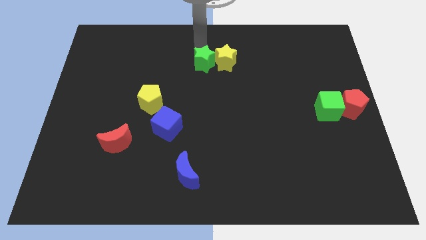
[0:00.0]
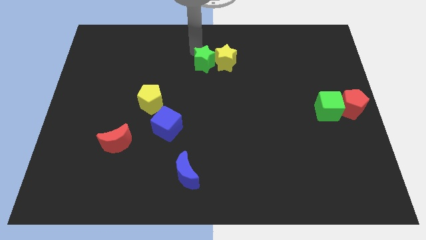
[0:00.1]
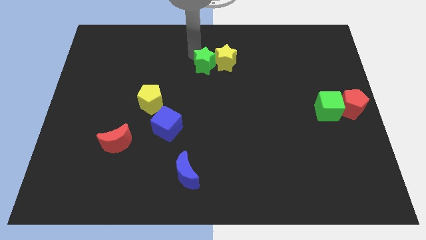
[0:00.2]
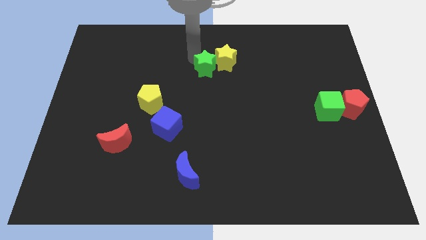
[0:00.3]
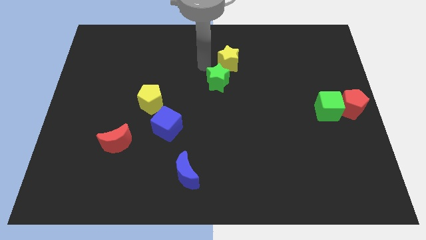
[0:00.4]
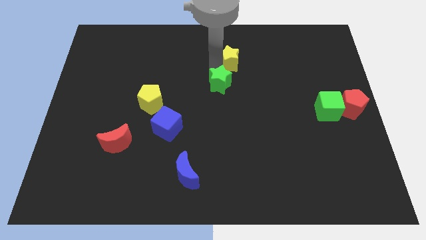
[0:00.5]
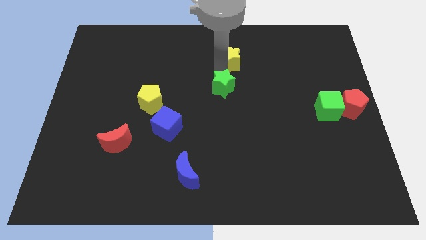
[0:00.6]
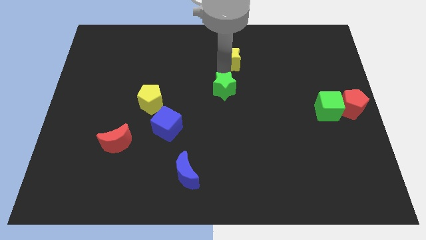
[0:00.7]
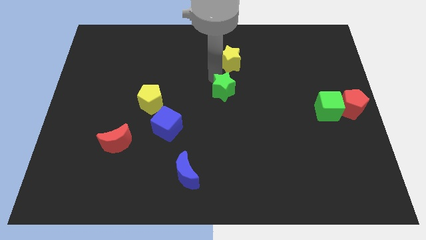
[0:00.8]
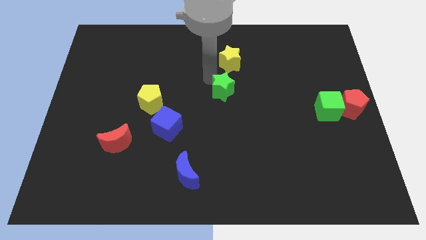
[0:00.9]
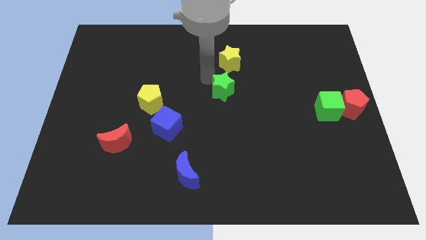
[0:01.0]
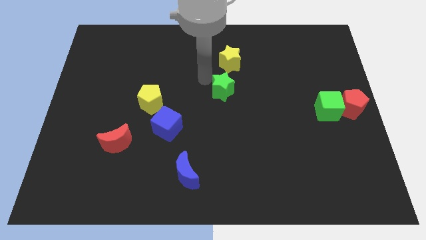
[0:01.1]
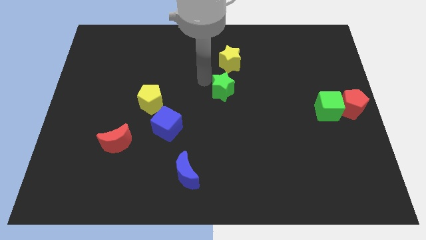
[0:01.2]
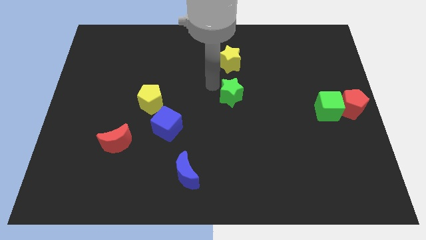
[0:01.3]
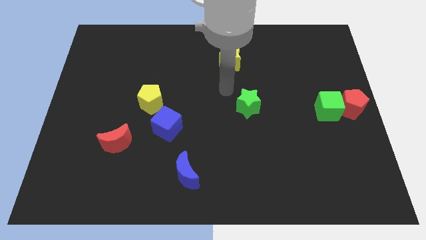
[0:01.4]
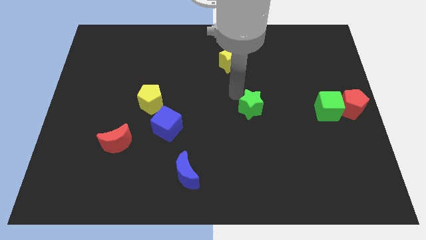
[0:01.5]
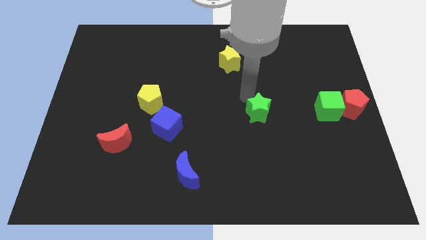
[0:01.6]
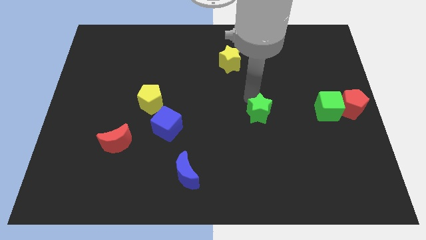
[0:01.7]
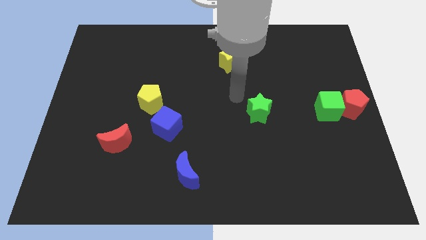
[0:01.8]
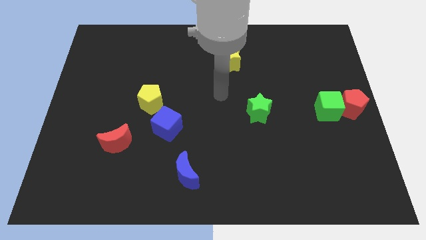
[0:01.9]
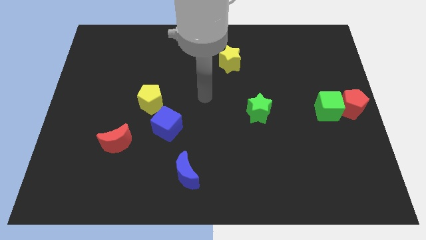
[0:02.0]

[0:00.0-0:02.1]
move the green star horizontally left to the green cube

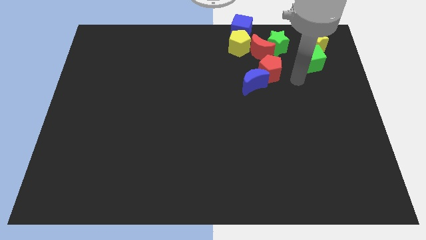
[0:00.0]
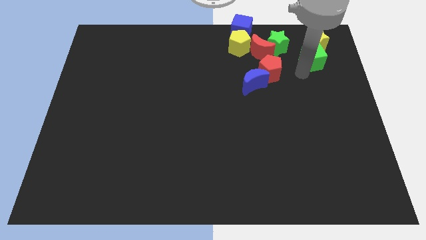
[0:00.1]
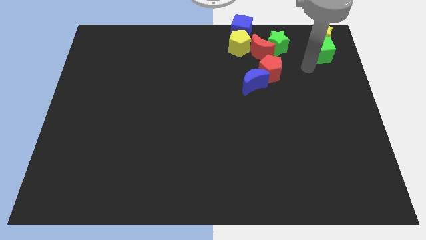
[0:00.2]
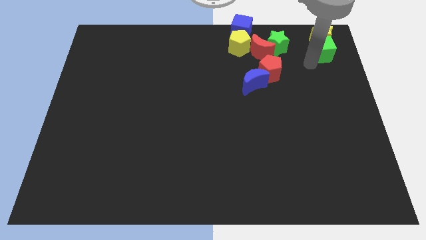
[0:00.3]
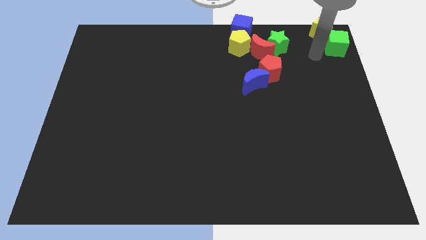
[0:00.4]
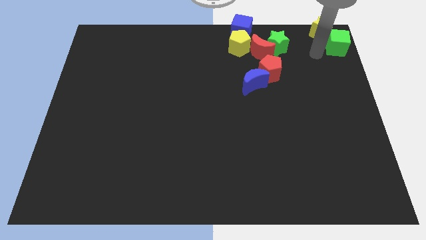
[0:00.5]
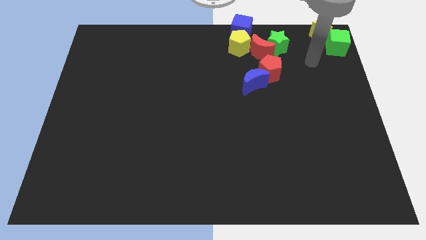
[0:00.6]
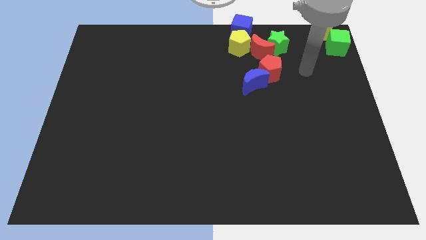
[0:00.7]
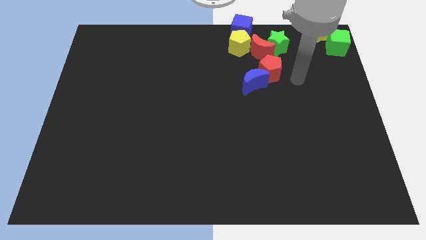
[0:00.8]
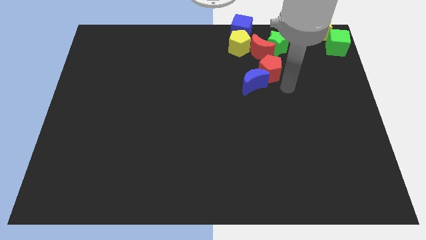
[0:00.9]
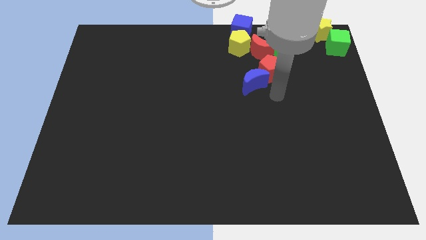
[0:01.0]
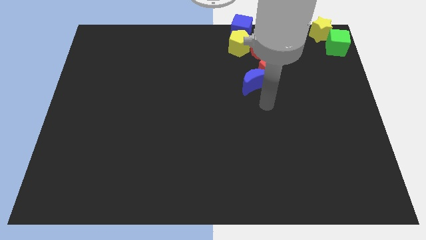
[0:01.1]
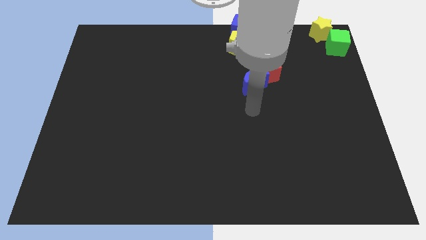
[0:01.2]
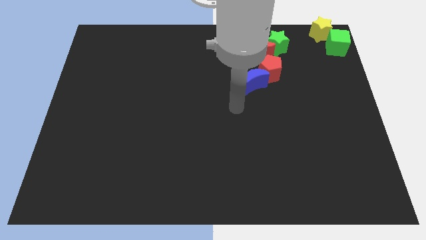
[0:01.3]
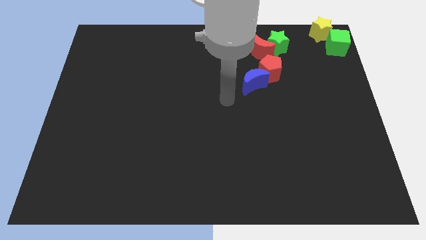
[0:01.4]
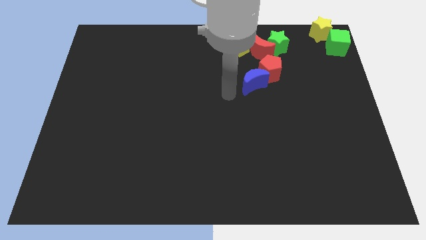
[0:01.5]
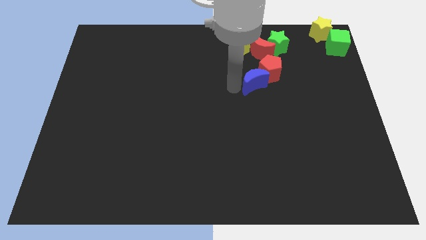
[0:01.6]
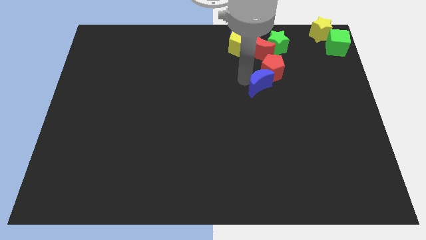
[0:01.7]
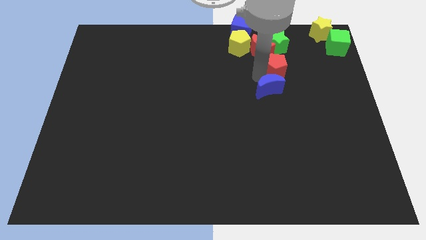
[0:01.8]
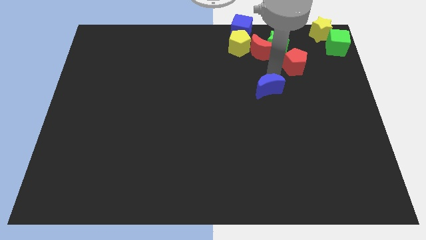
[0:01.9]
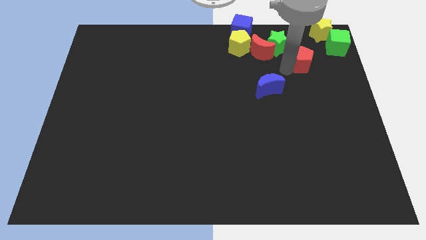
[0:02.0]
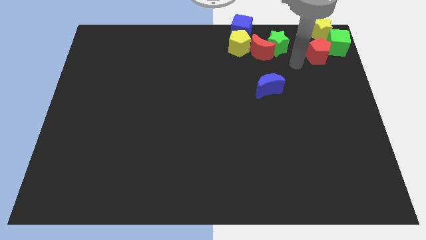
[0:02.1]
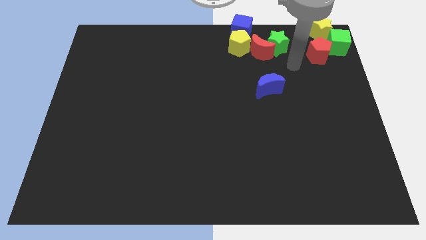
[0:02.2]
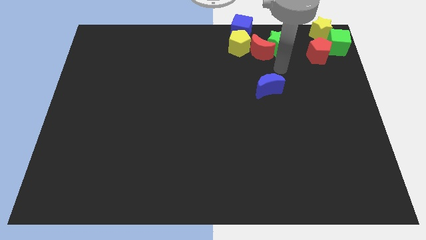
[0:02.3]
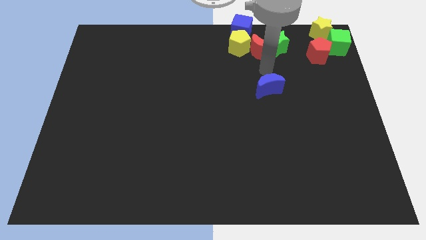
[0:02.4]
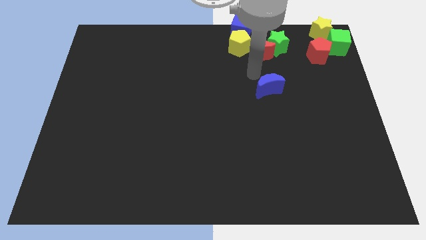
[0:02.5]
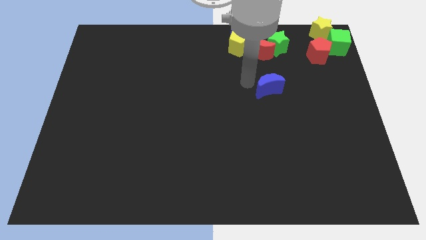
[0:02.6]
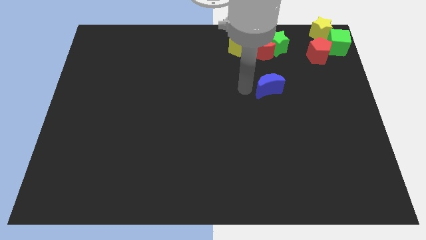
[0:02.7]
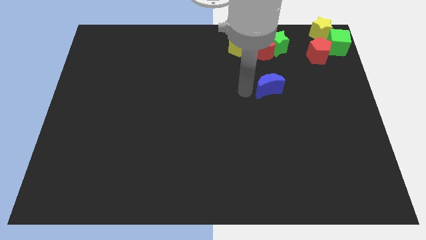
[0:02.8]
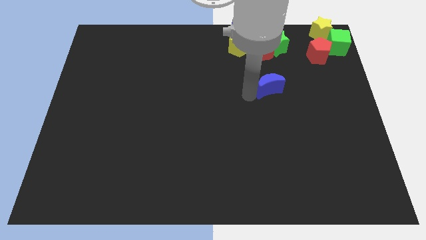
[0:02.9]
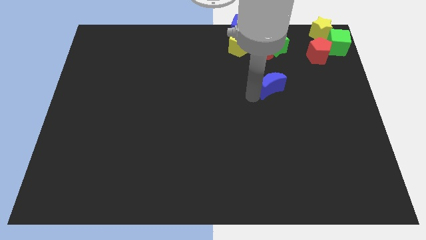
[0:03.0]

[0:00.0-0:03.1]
push the red pentagon into green cube

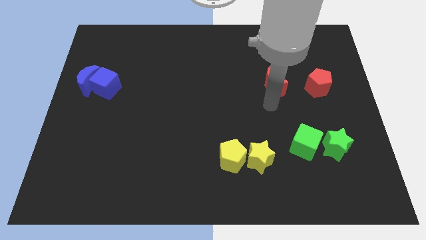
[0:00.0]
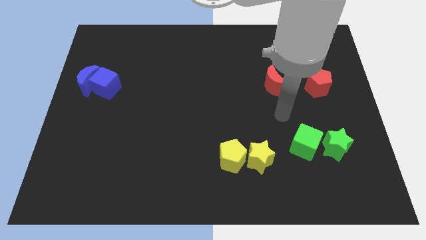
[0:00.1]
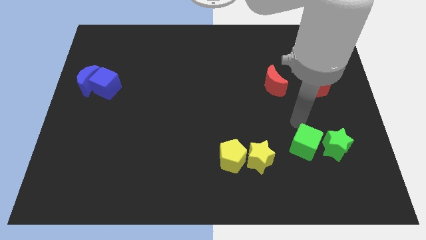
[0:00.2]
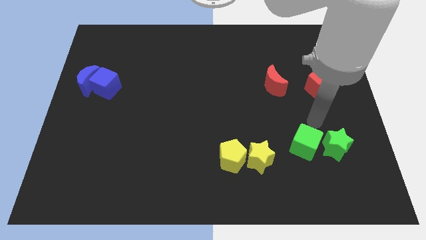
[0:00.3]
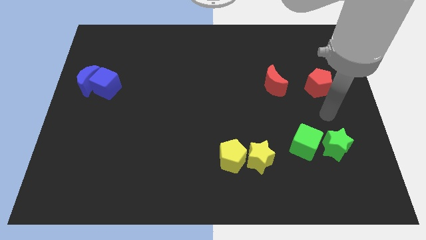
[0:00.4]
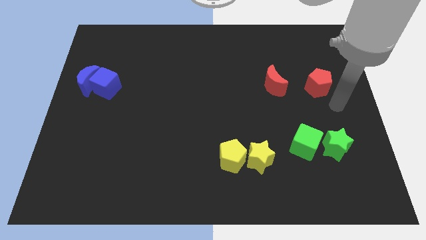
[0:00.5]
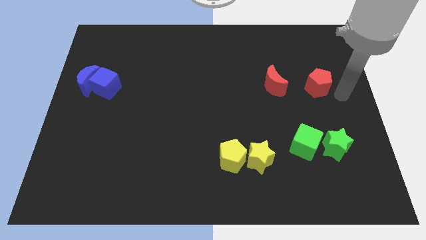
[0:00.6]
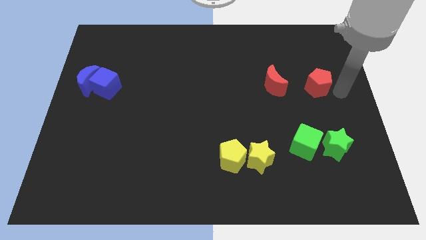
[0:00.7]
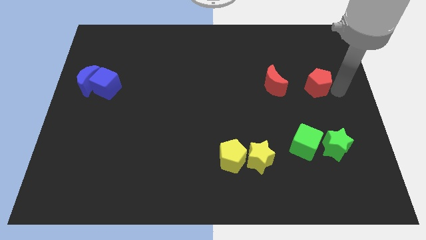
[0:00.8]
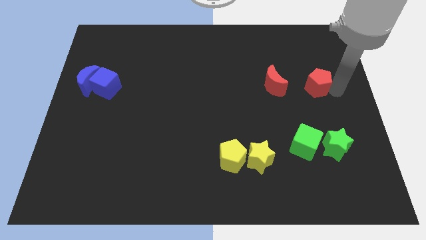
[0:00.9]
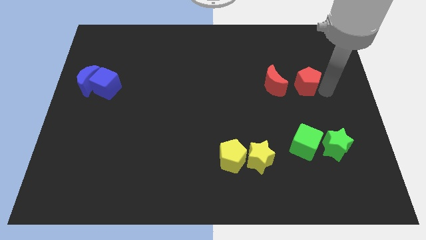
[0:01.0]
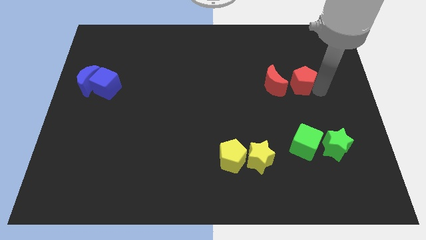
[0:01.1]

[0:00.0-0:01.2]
point your arm to the right side of red pentagon

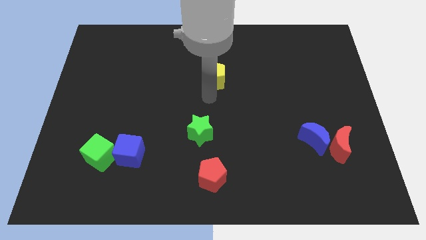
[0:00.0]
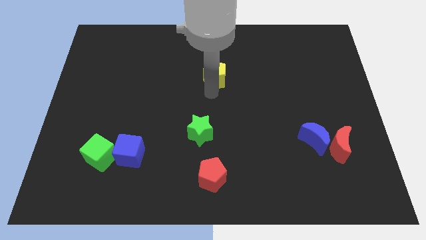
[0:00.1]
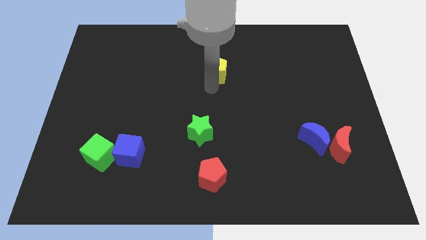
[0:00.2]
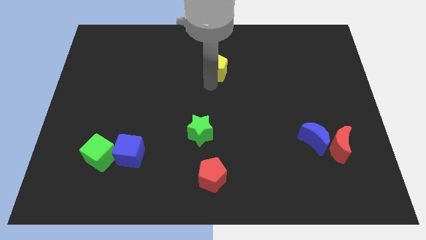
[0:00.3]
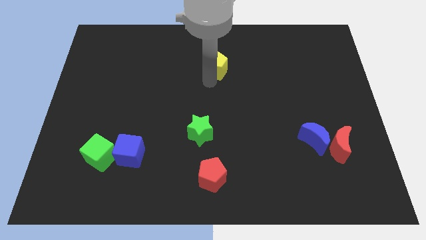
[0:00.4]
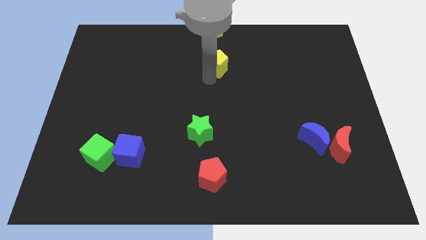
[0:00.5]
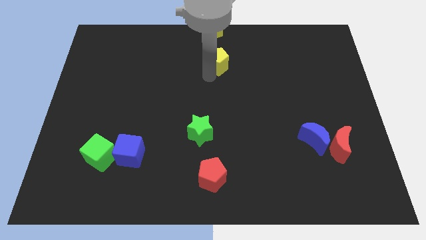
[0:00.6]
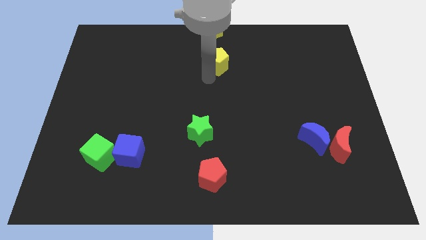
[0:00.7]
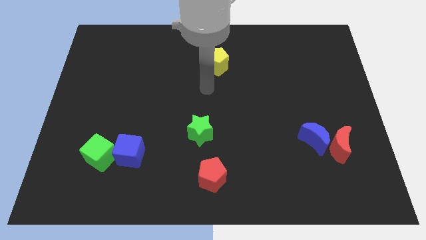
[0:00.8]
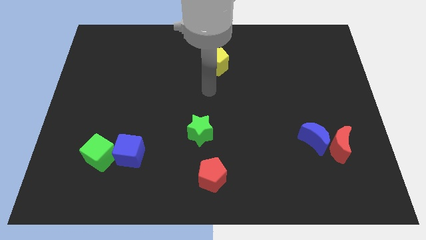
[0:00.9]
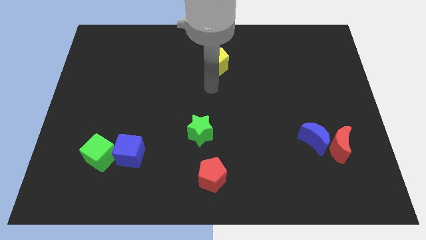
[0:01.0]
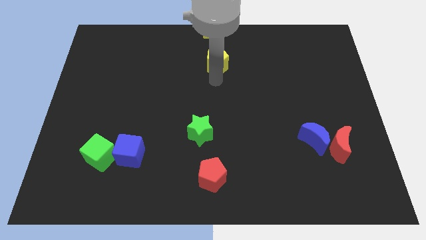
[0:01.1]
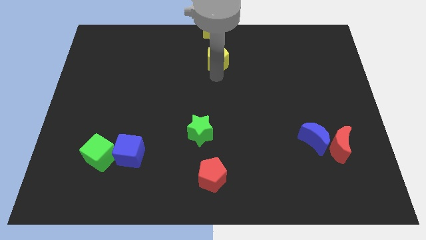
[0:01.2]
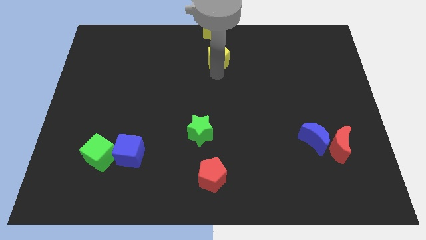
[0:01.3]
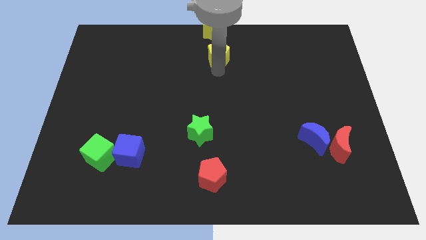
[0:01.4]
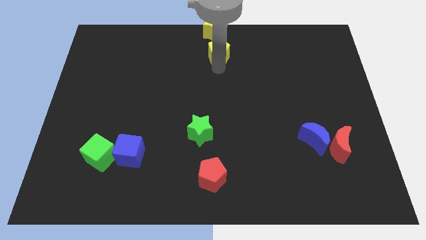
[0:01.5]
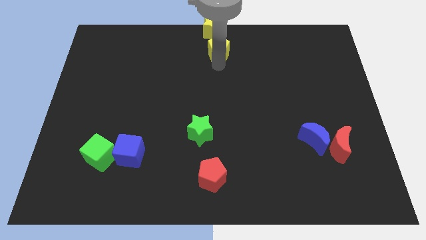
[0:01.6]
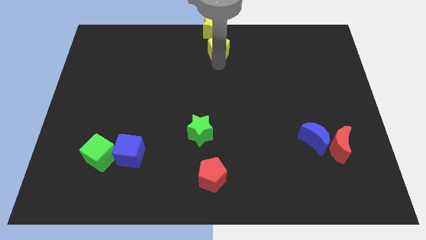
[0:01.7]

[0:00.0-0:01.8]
place the yellow pentagon below the yellow star

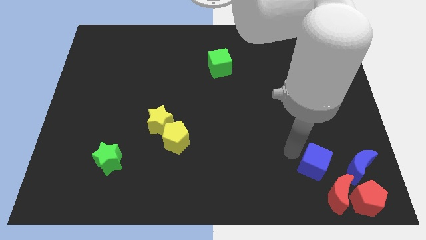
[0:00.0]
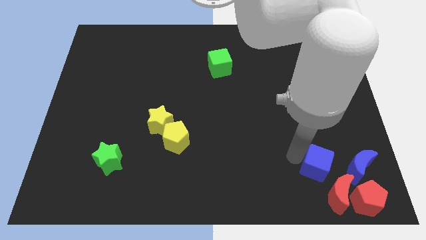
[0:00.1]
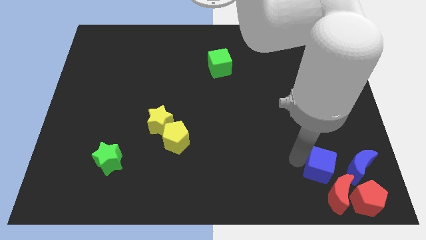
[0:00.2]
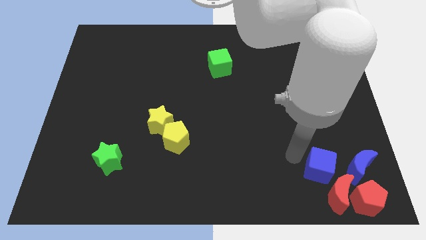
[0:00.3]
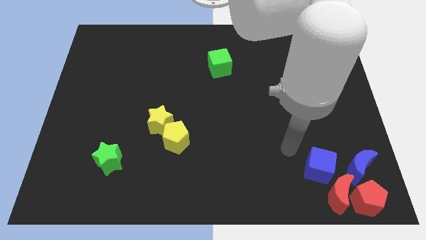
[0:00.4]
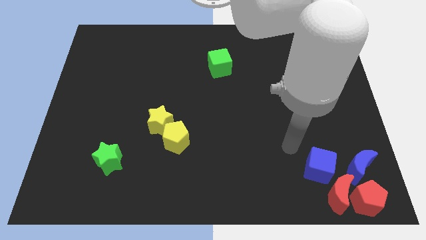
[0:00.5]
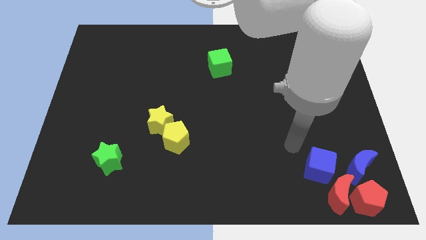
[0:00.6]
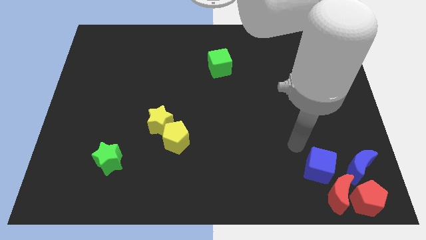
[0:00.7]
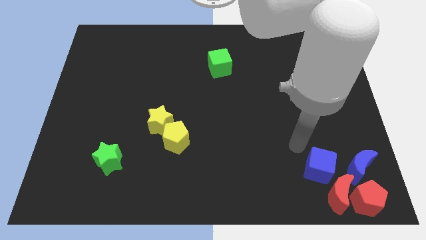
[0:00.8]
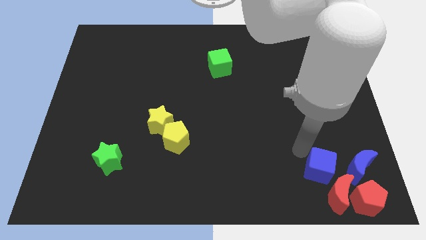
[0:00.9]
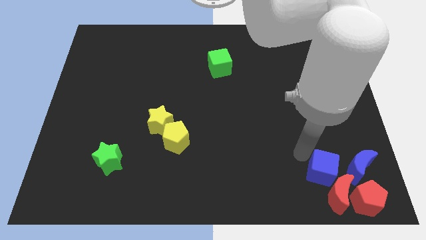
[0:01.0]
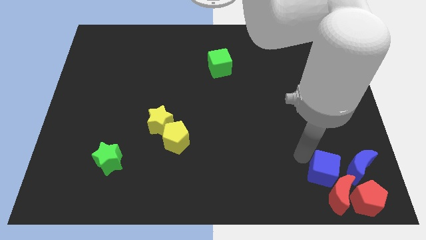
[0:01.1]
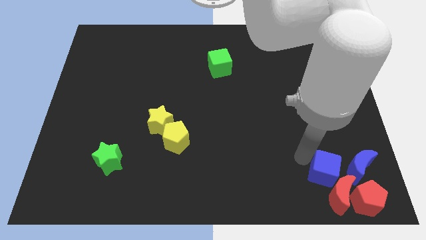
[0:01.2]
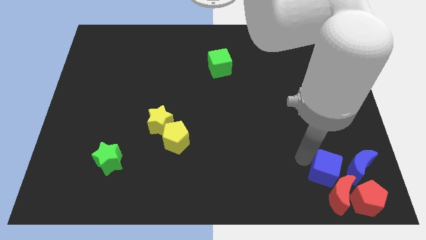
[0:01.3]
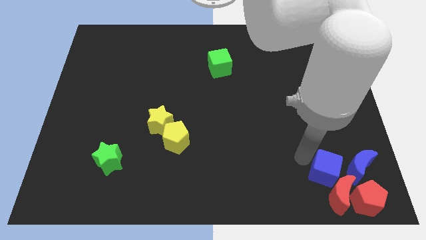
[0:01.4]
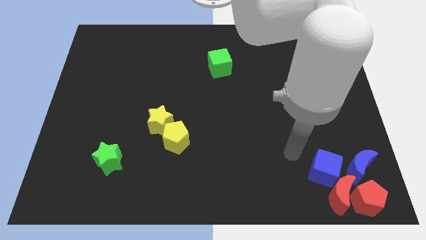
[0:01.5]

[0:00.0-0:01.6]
push the blue cube into the red crescent on the bottom right of the board
